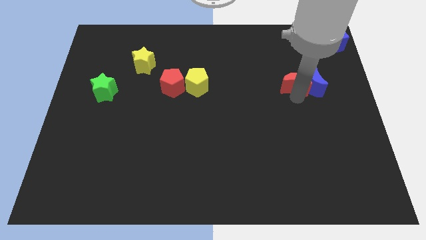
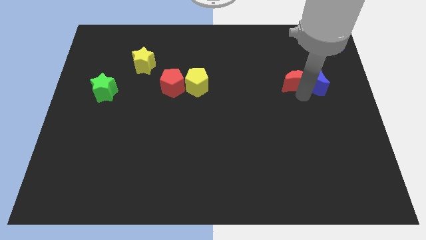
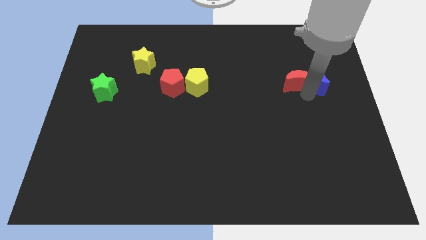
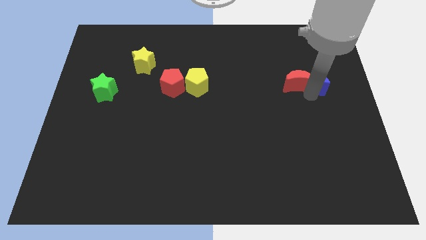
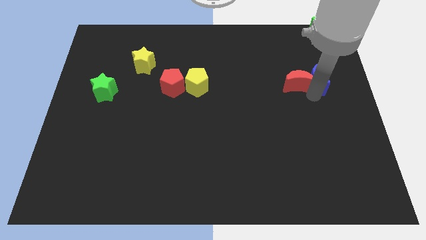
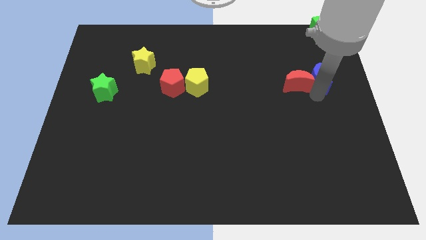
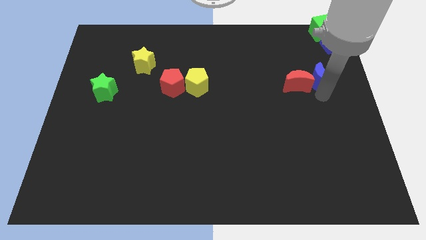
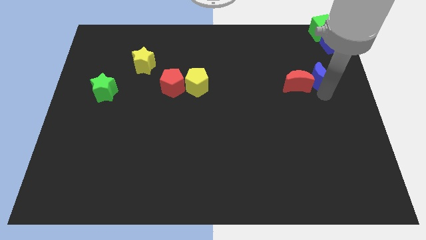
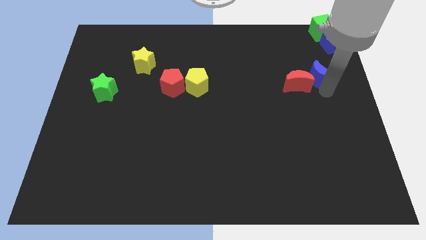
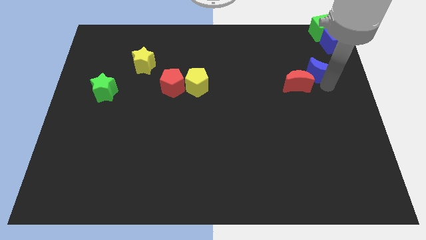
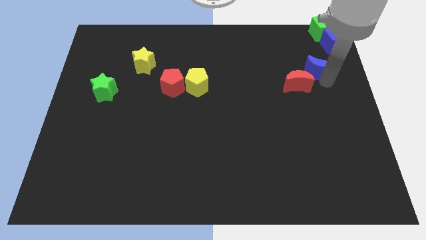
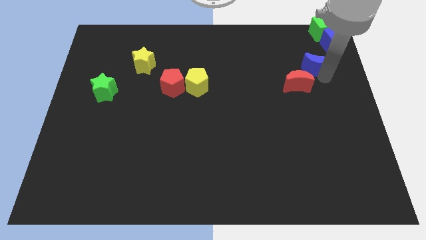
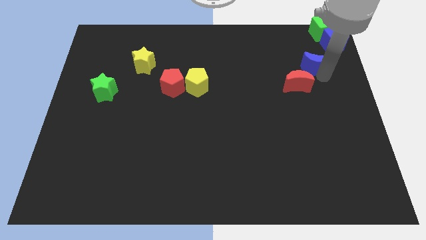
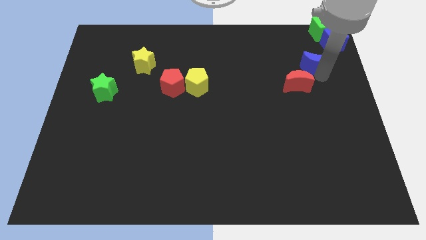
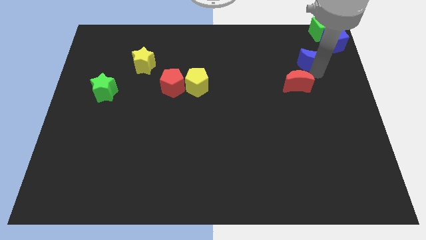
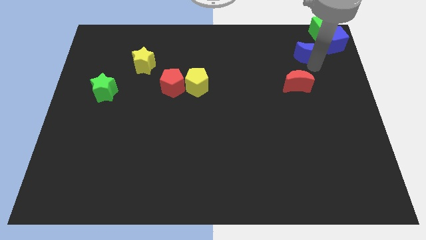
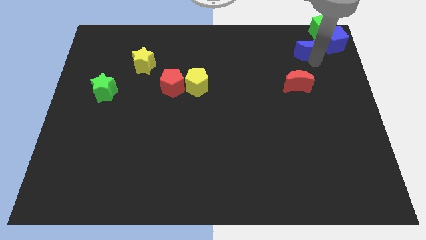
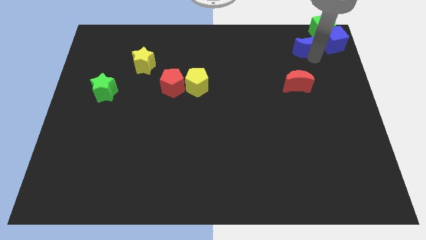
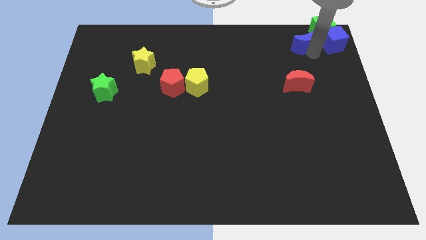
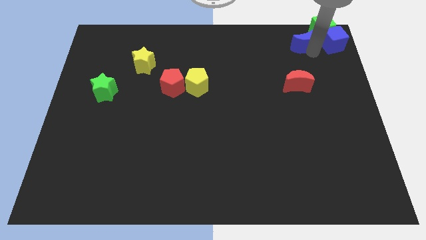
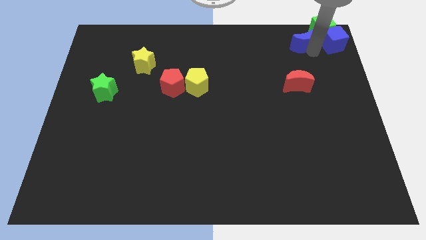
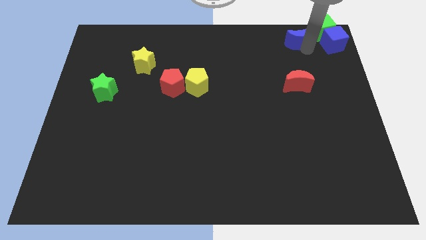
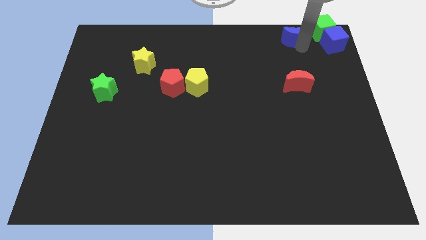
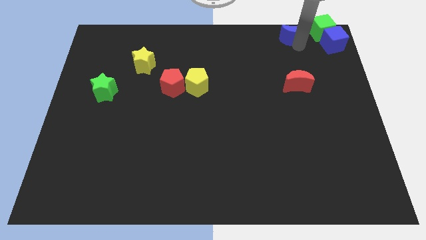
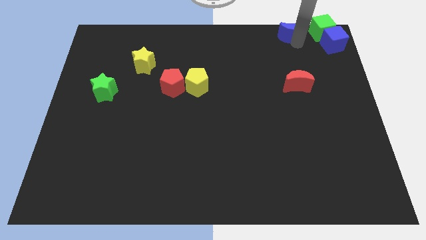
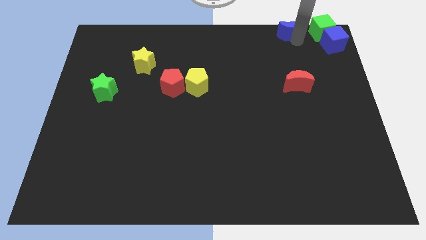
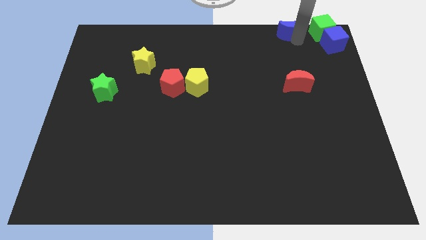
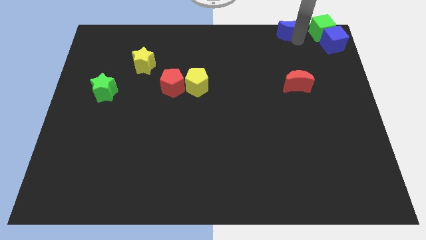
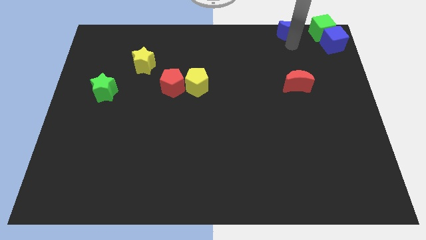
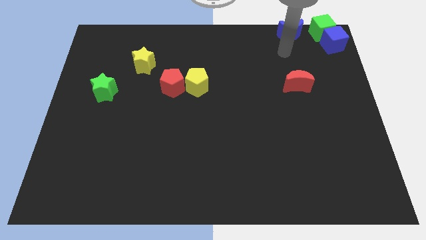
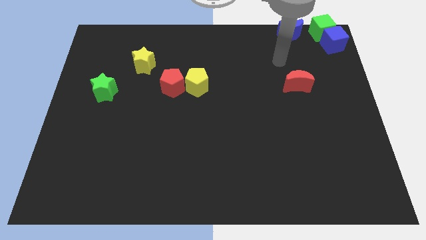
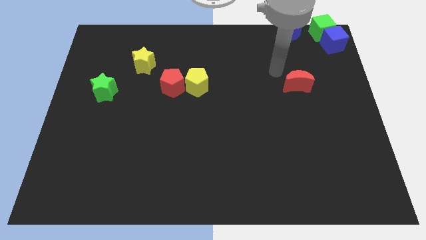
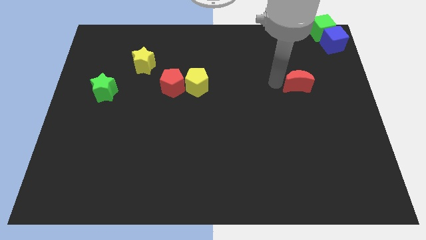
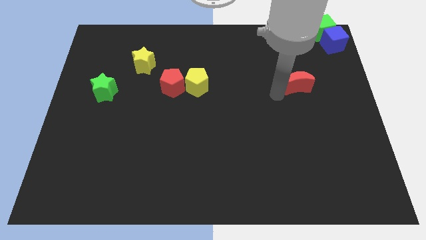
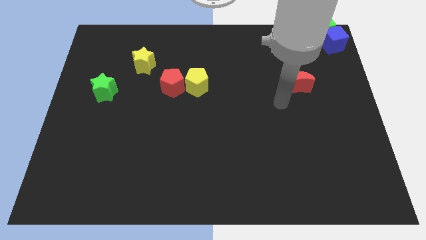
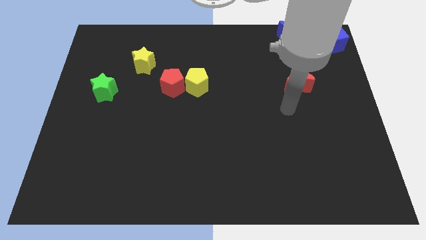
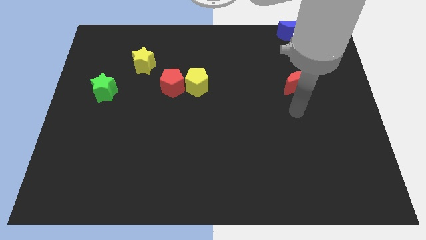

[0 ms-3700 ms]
separate blue crescent from red crescent

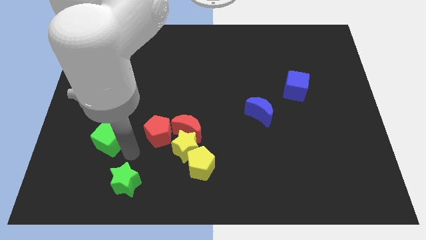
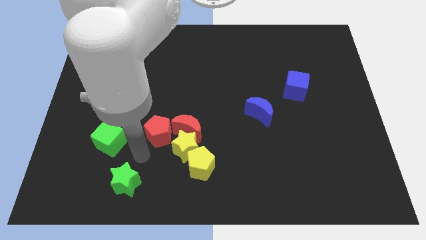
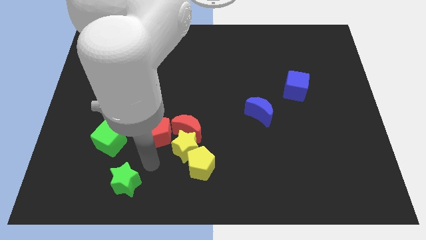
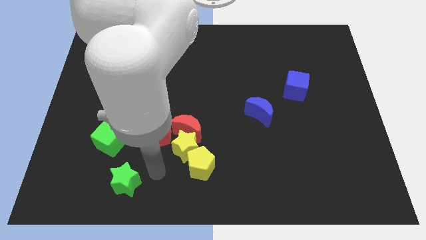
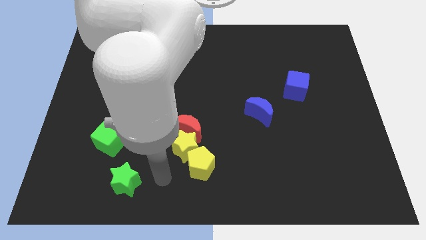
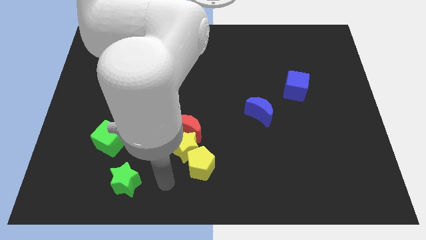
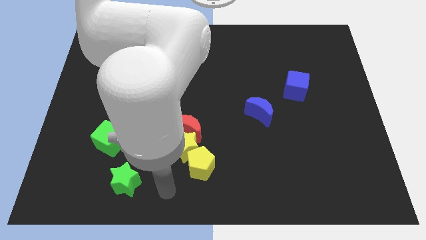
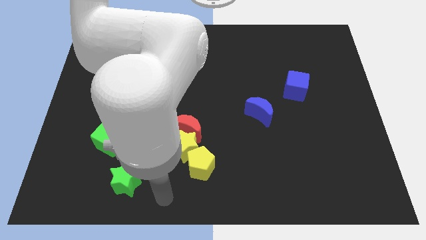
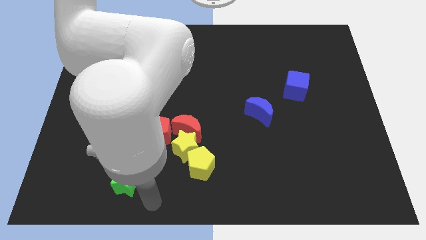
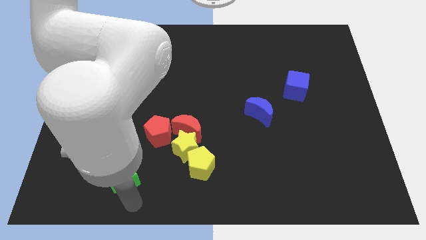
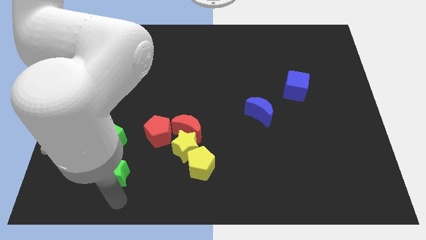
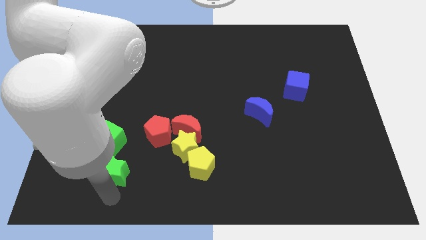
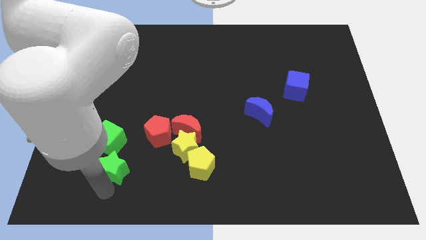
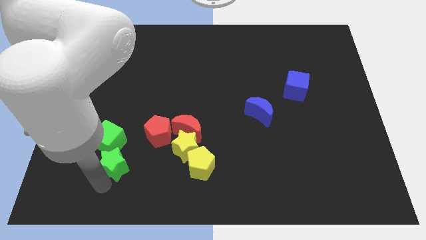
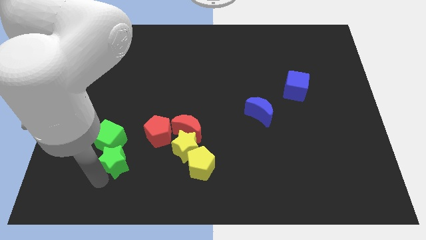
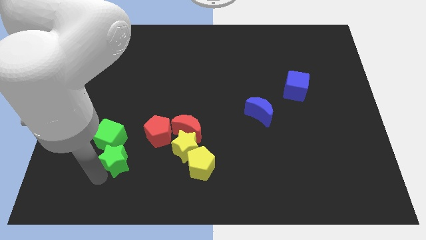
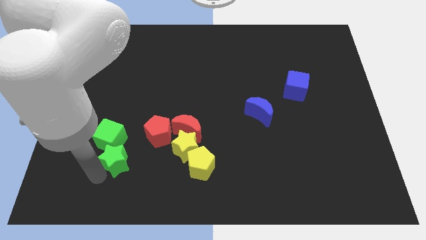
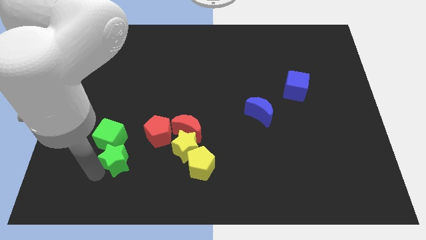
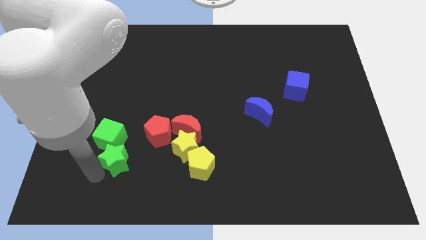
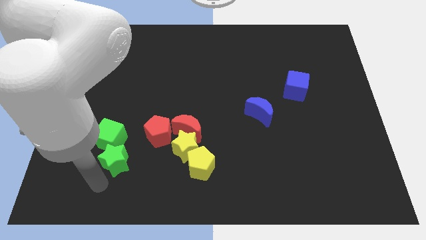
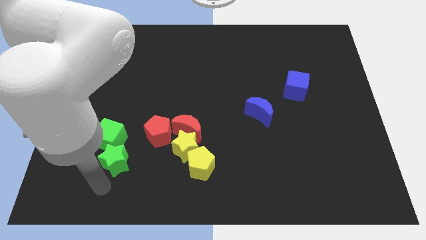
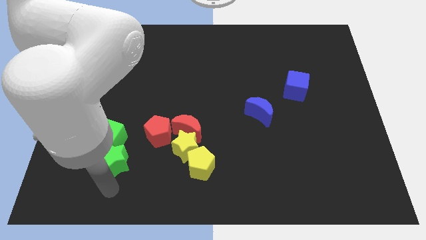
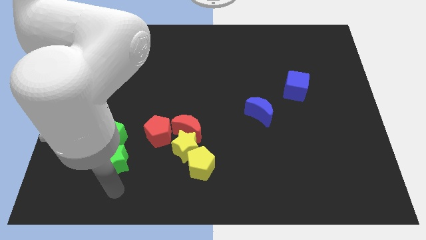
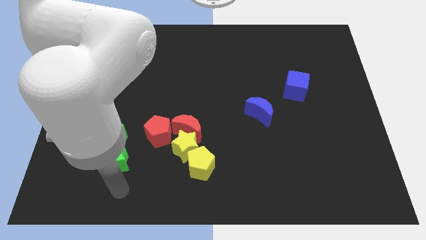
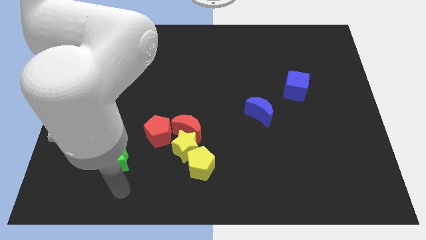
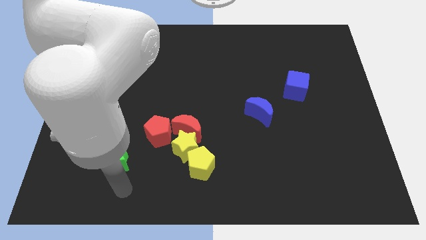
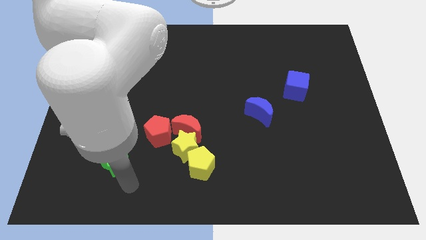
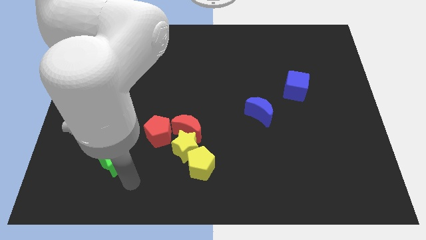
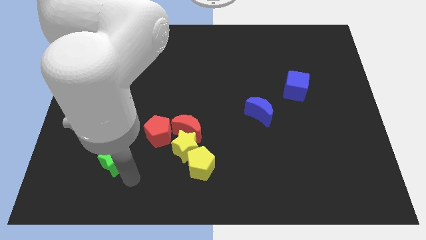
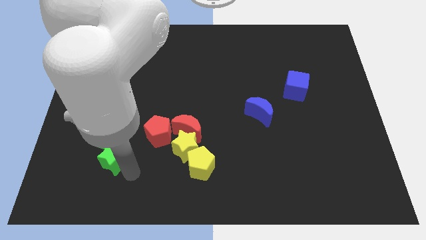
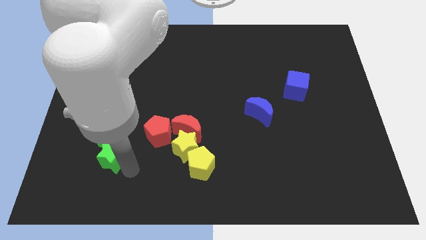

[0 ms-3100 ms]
move the green star into the green cube

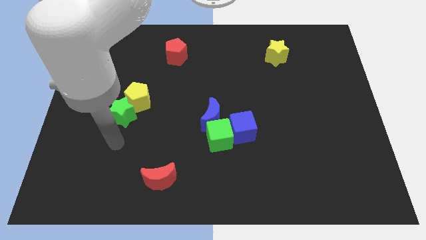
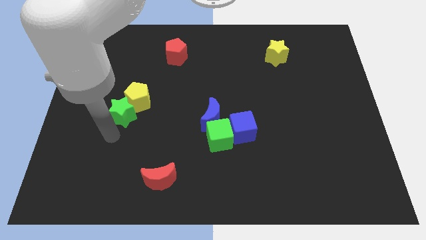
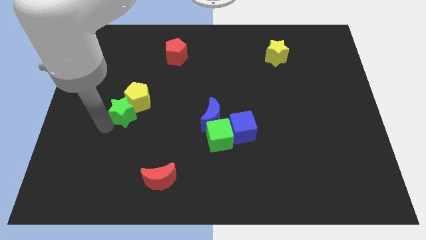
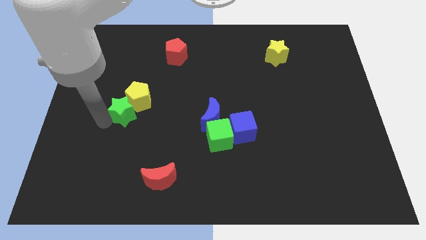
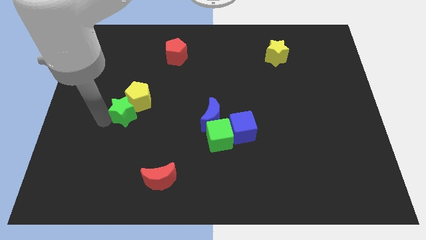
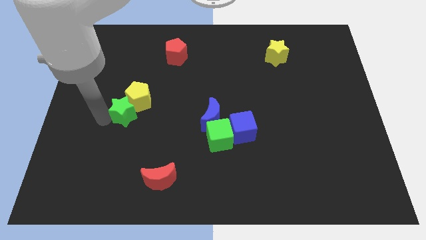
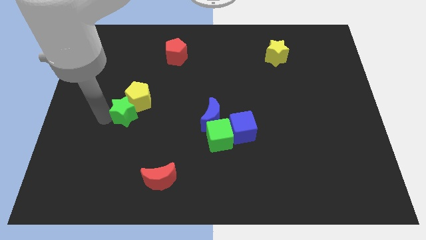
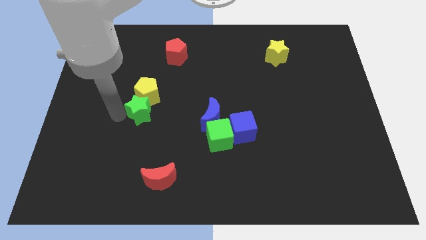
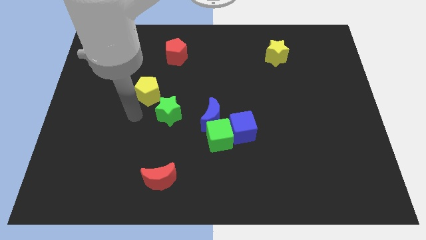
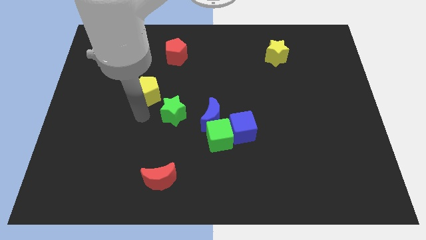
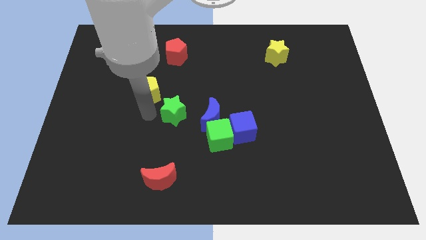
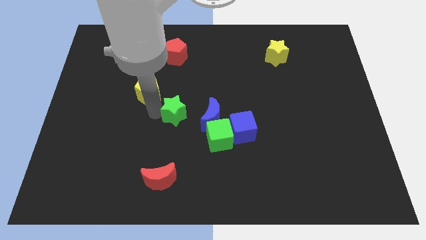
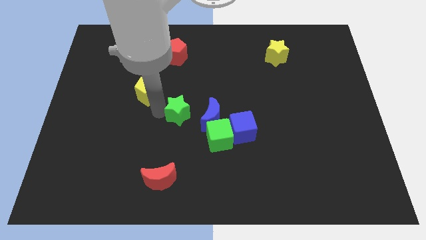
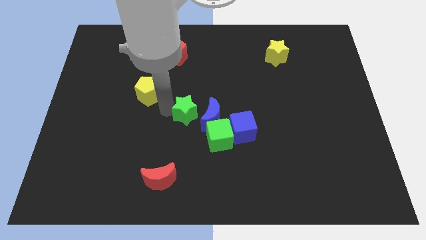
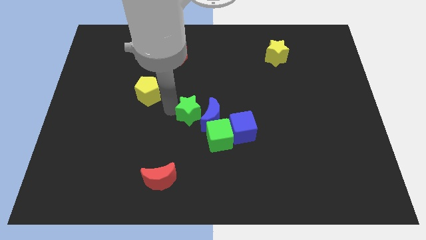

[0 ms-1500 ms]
separate green star from the yellow pentagon

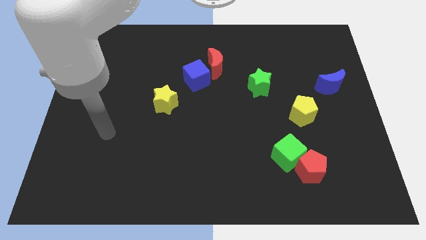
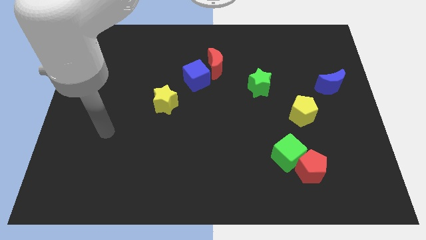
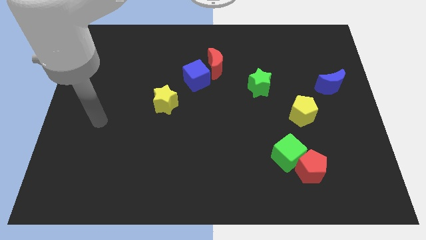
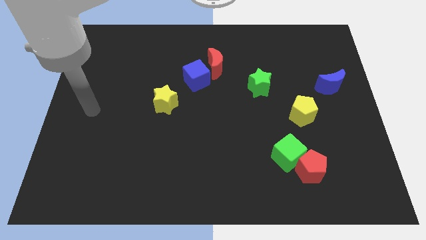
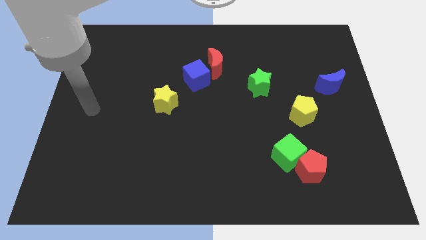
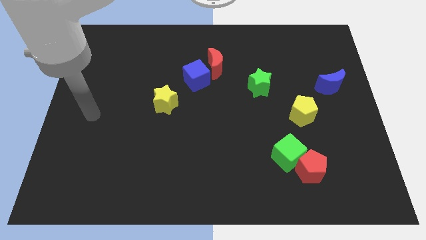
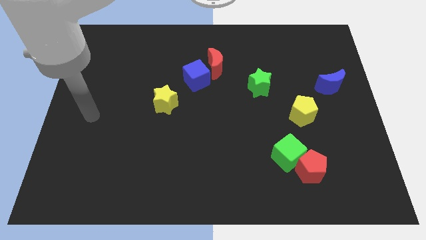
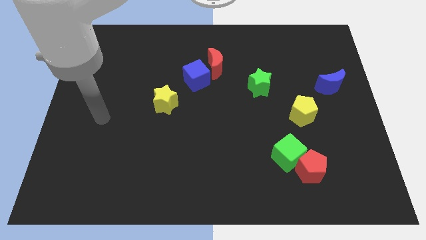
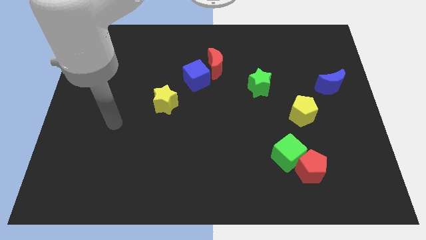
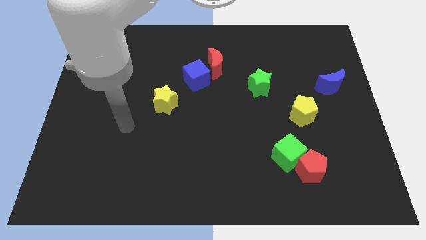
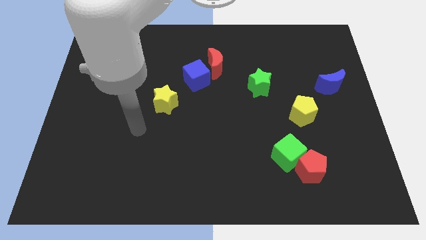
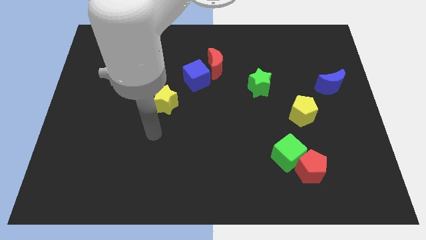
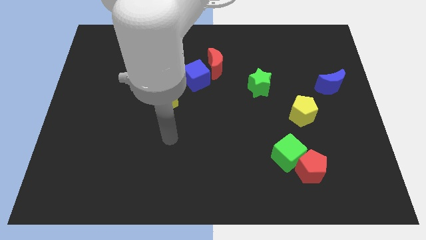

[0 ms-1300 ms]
point your arm at the bottom of the yellow star
